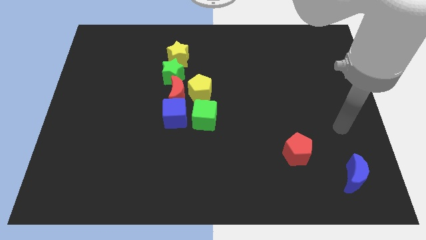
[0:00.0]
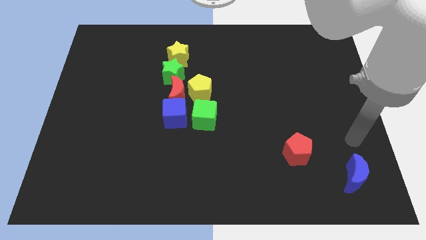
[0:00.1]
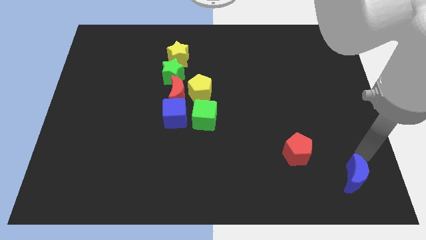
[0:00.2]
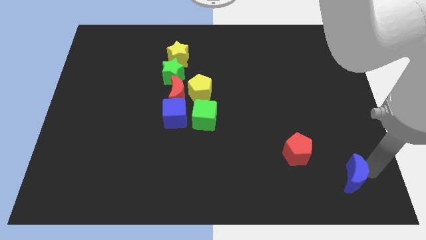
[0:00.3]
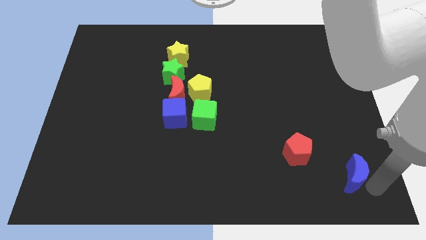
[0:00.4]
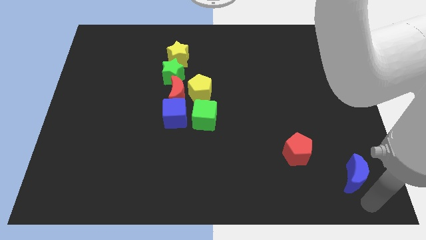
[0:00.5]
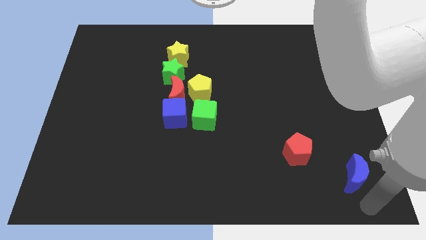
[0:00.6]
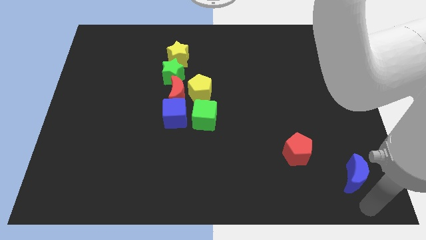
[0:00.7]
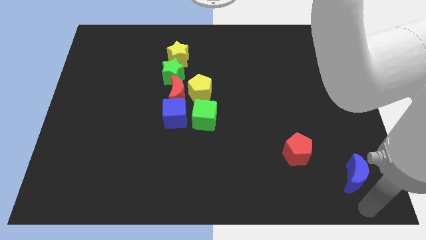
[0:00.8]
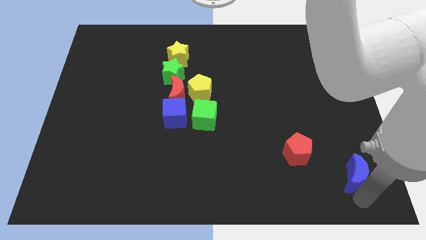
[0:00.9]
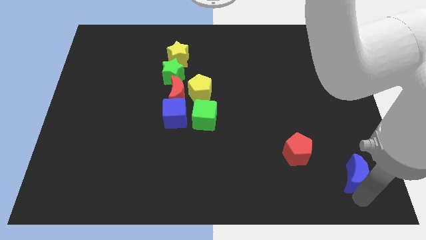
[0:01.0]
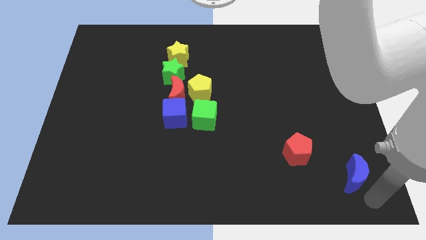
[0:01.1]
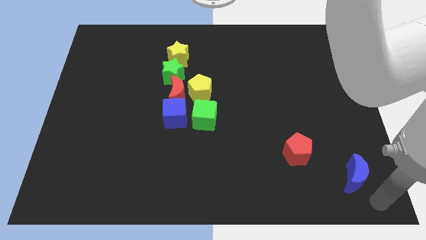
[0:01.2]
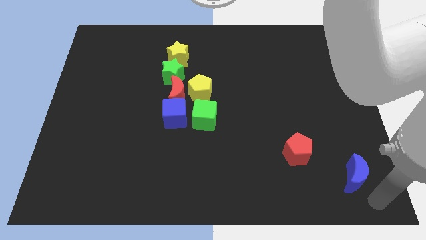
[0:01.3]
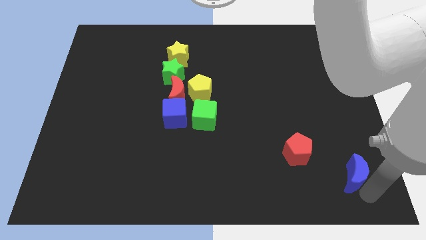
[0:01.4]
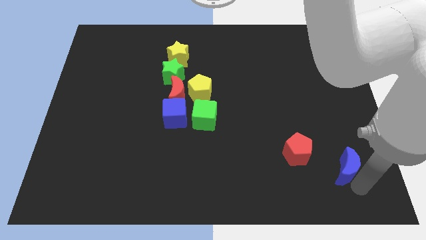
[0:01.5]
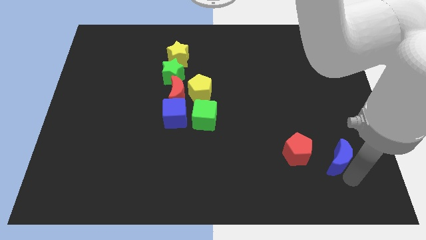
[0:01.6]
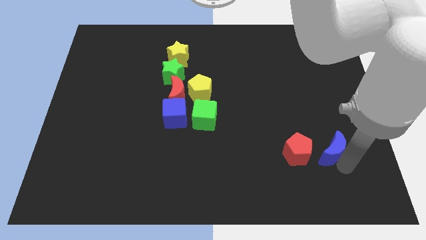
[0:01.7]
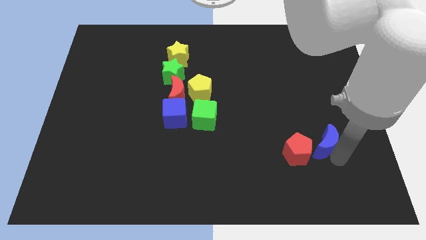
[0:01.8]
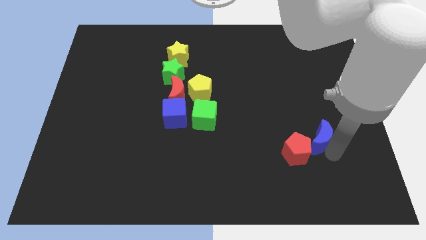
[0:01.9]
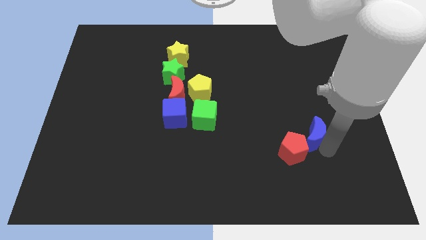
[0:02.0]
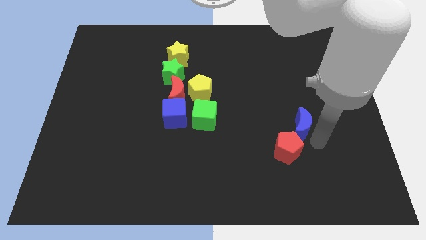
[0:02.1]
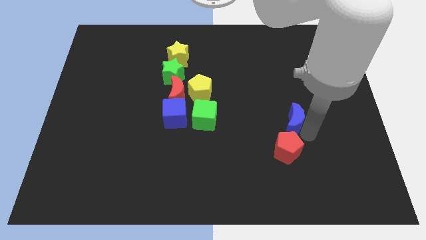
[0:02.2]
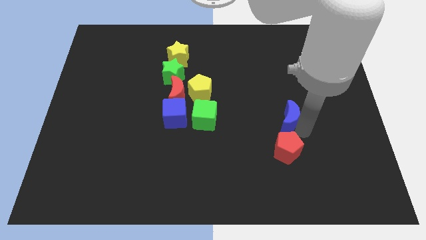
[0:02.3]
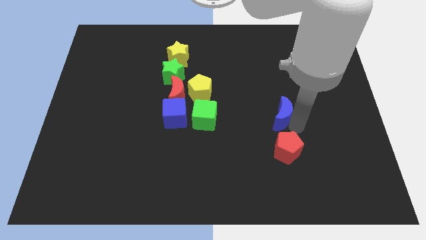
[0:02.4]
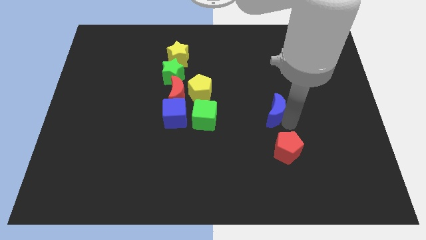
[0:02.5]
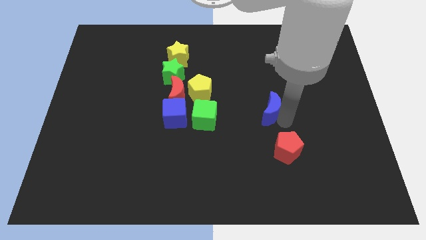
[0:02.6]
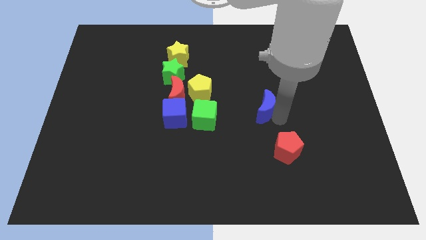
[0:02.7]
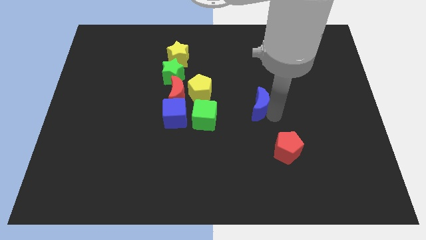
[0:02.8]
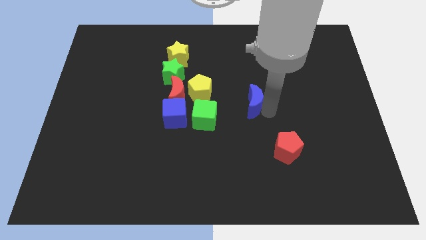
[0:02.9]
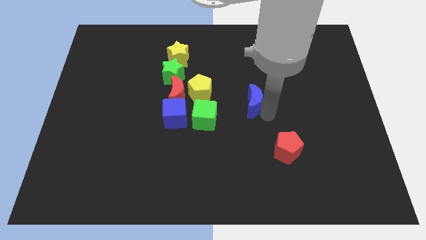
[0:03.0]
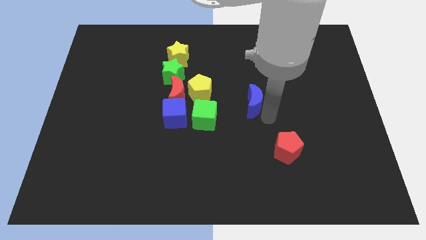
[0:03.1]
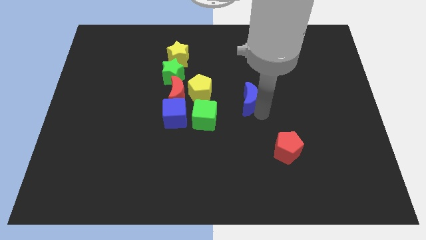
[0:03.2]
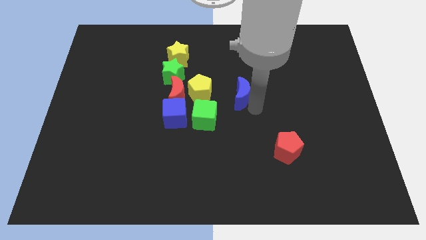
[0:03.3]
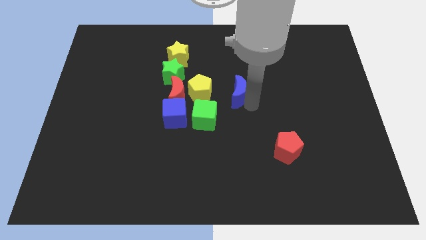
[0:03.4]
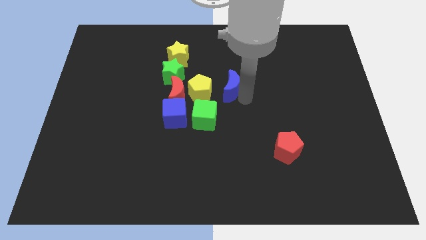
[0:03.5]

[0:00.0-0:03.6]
place the blue crescent horizontally to the right side of the yellow pentagon

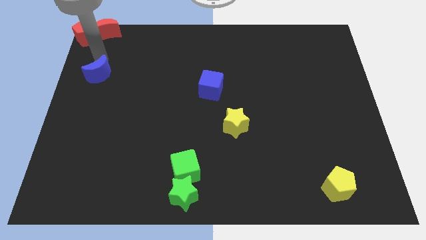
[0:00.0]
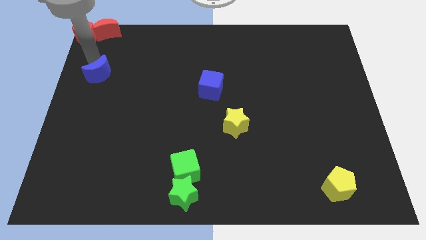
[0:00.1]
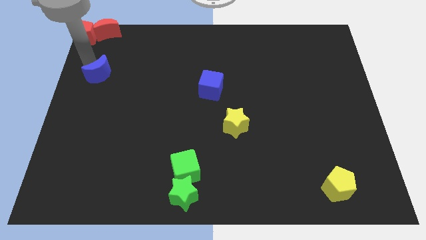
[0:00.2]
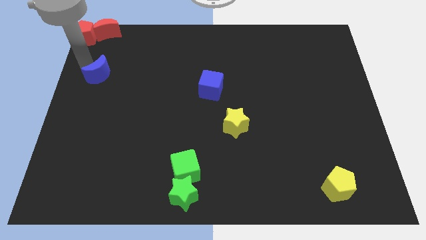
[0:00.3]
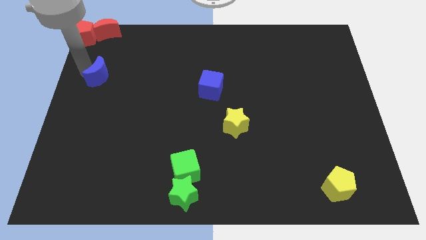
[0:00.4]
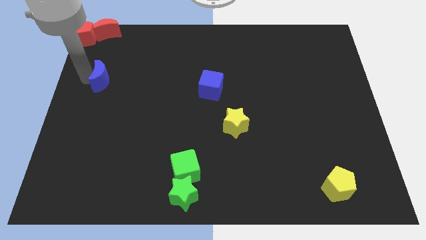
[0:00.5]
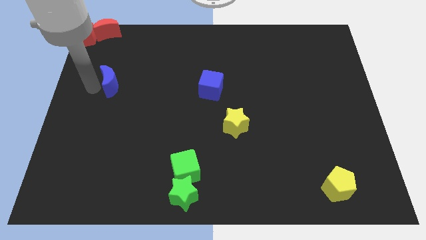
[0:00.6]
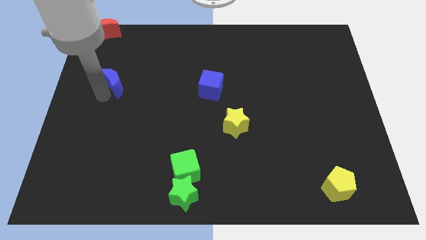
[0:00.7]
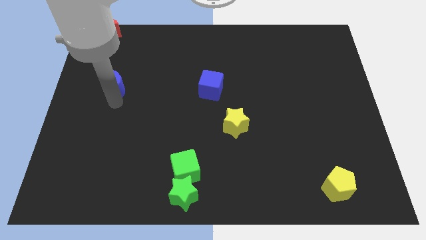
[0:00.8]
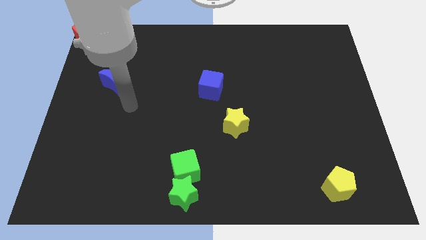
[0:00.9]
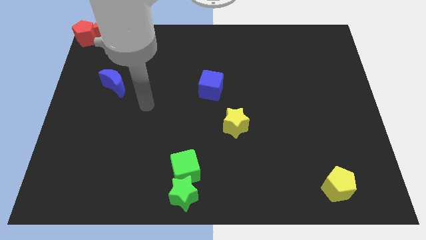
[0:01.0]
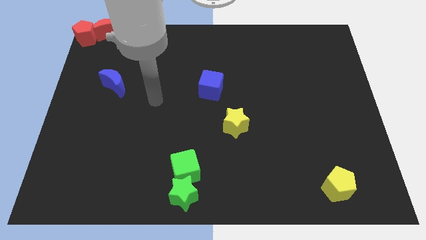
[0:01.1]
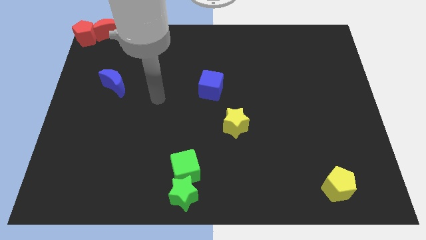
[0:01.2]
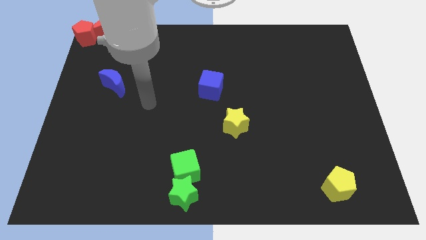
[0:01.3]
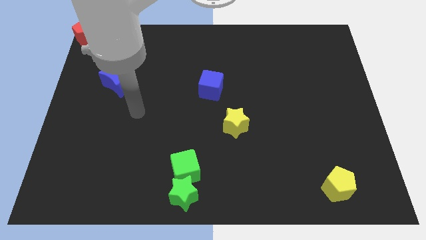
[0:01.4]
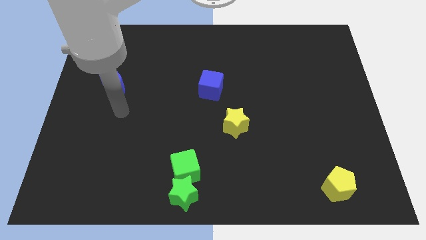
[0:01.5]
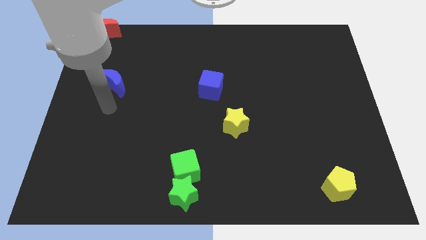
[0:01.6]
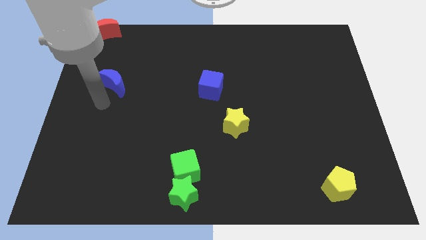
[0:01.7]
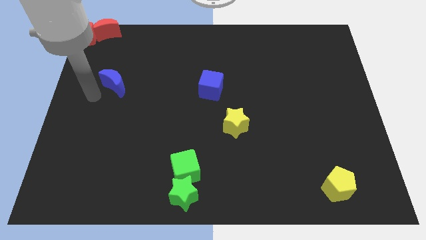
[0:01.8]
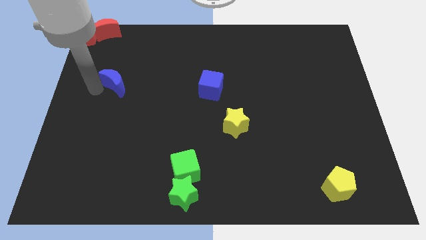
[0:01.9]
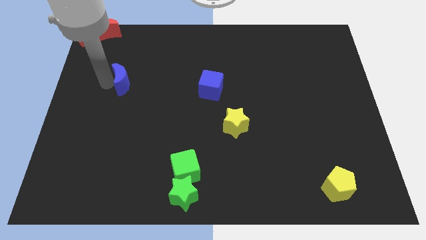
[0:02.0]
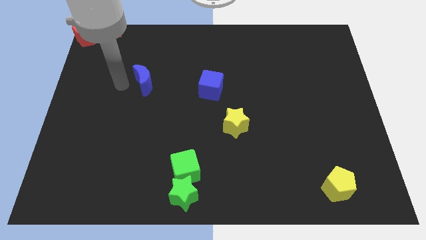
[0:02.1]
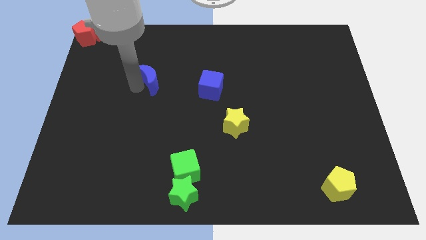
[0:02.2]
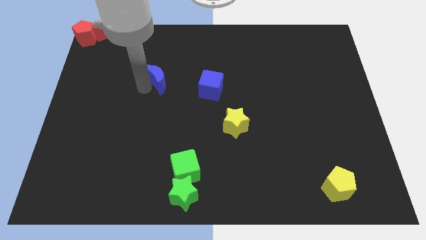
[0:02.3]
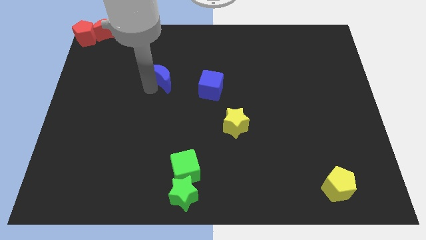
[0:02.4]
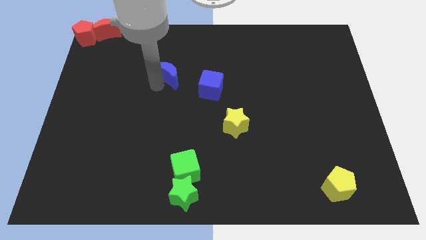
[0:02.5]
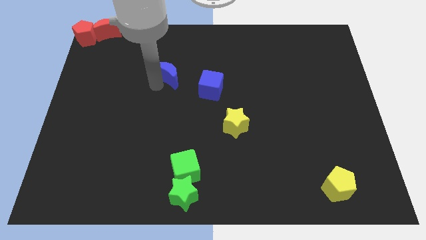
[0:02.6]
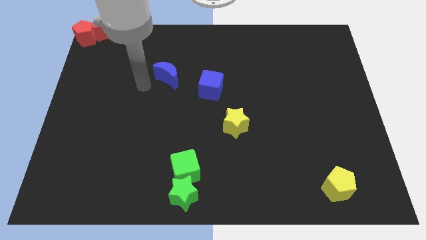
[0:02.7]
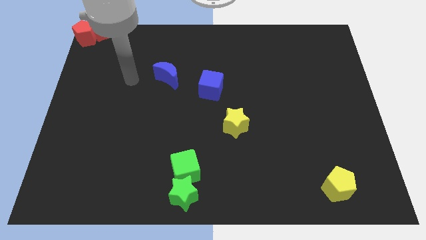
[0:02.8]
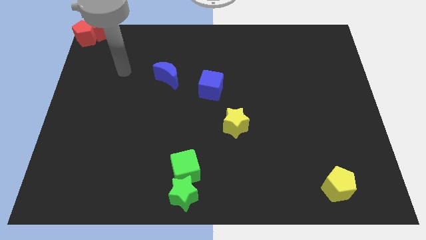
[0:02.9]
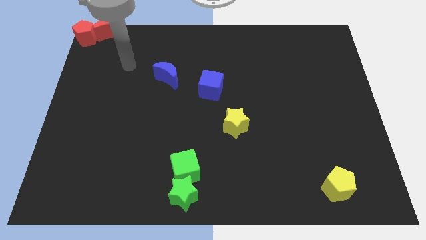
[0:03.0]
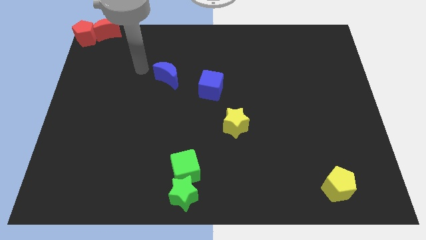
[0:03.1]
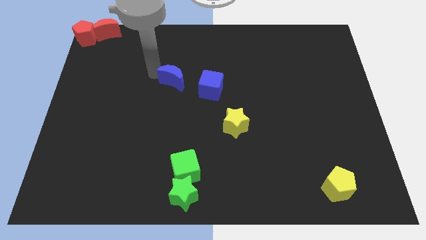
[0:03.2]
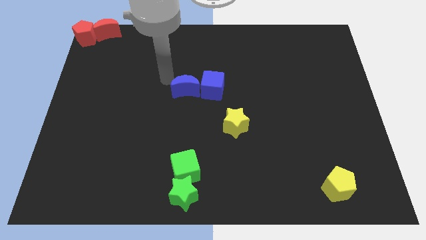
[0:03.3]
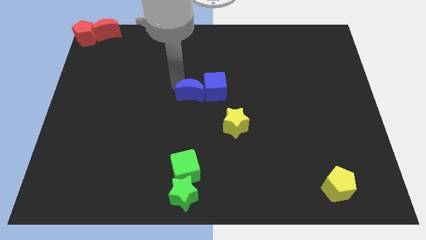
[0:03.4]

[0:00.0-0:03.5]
move the blue moon into the blue cube to the left

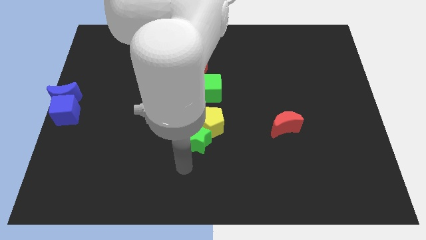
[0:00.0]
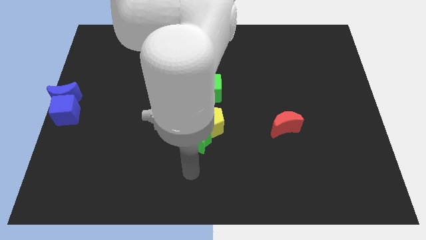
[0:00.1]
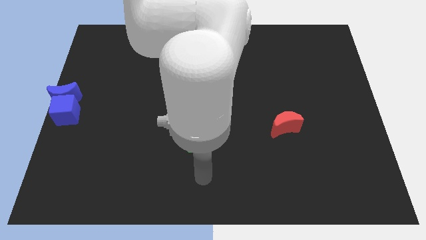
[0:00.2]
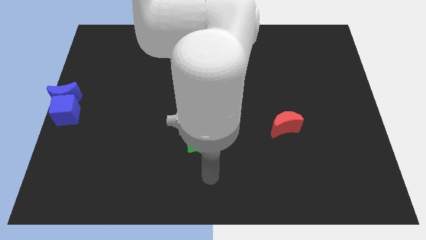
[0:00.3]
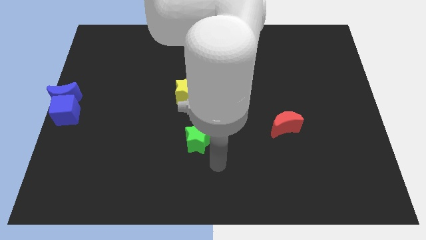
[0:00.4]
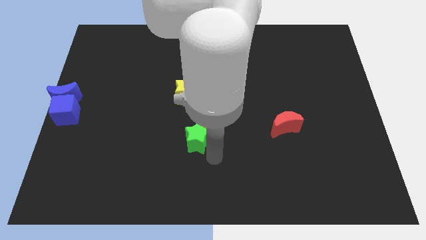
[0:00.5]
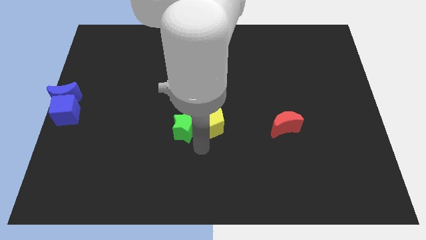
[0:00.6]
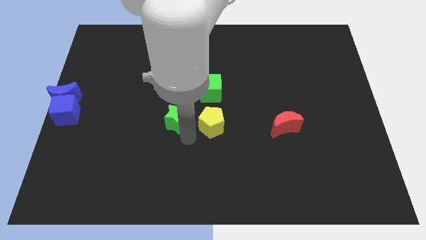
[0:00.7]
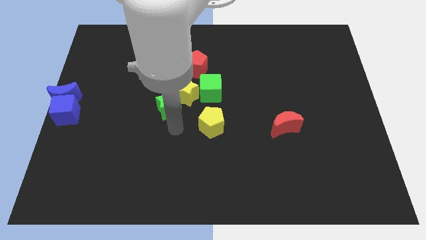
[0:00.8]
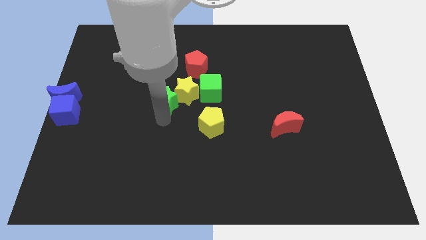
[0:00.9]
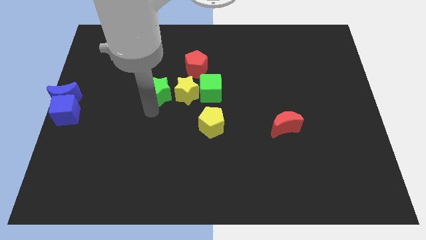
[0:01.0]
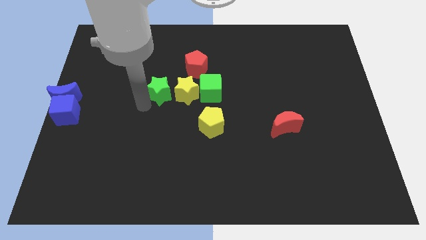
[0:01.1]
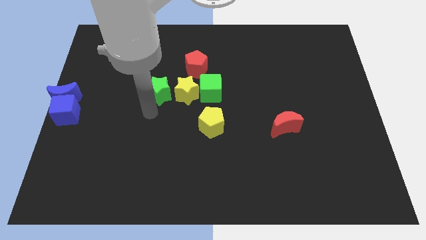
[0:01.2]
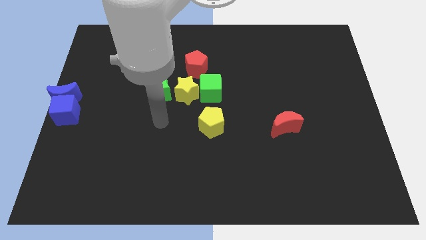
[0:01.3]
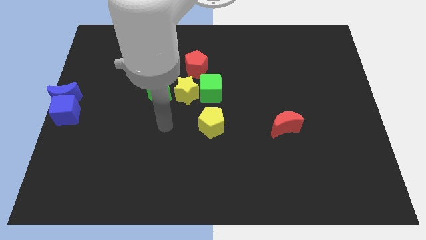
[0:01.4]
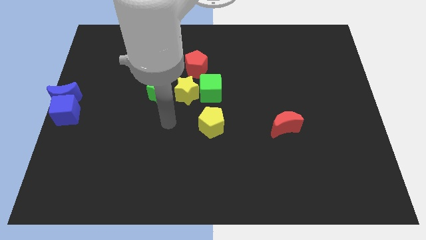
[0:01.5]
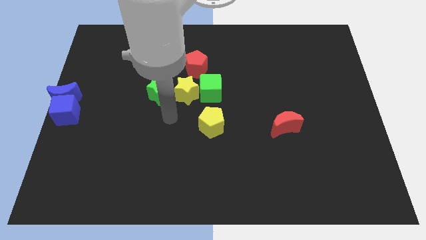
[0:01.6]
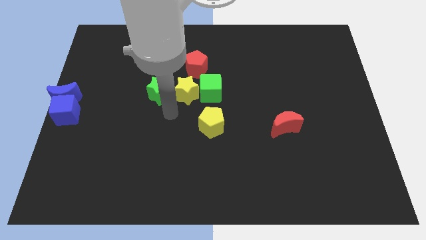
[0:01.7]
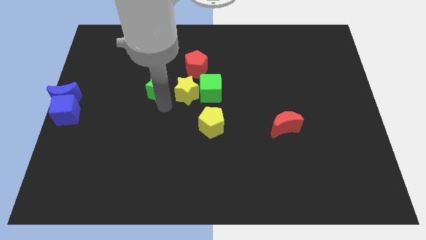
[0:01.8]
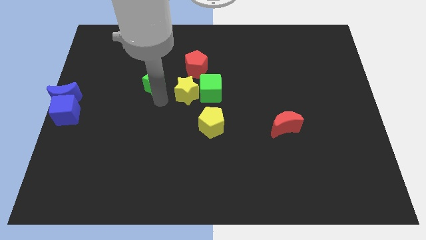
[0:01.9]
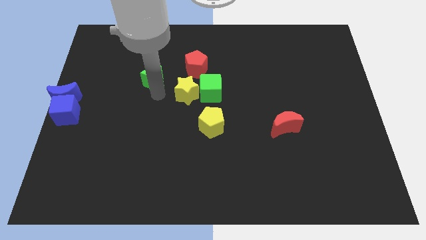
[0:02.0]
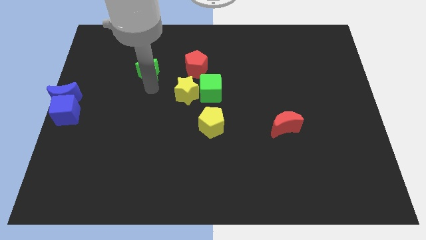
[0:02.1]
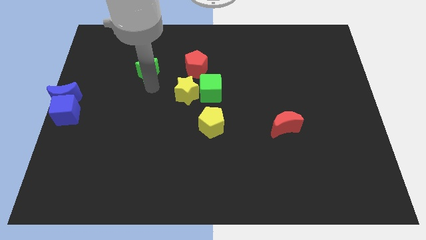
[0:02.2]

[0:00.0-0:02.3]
move the green star to the left of the red pentagon
